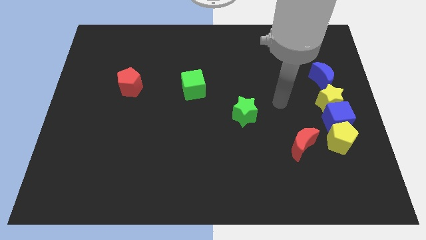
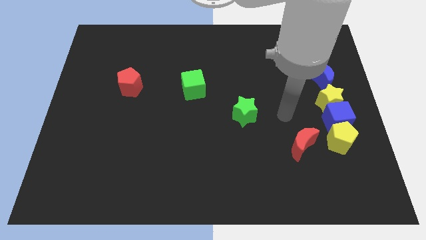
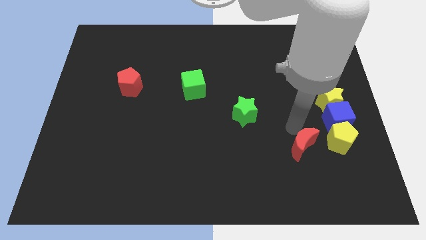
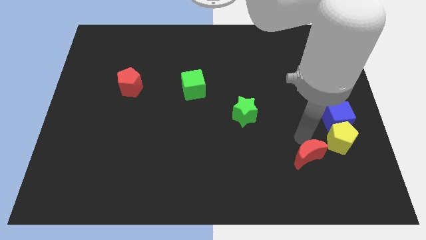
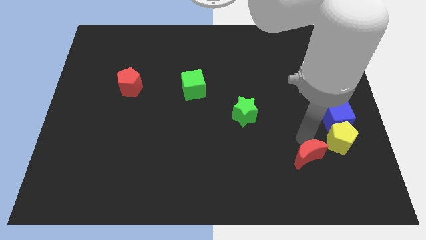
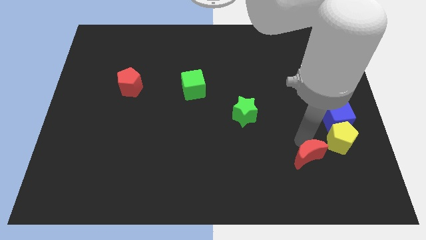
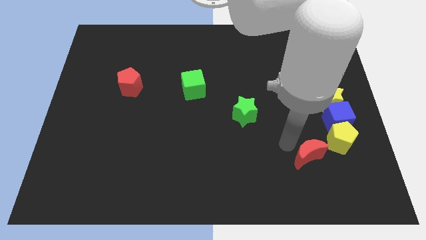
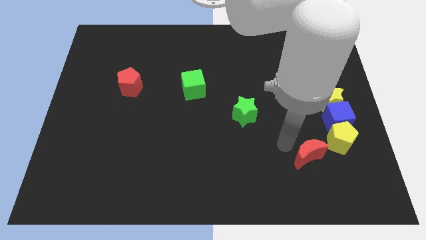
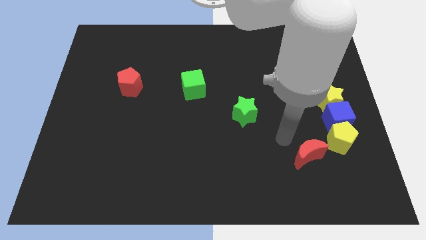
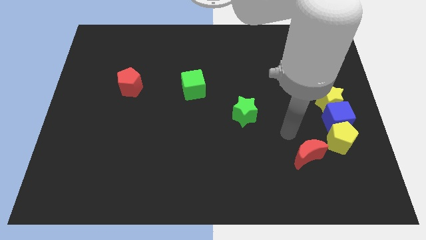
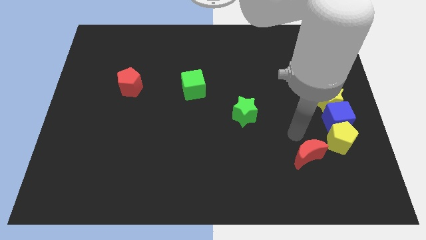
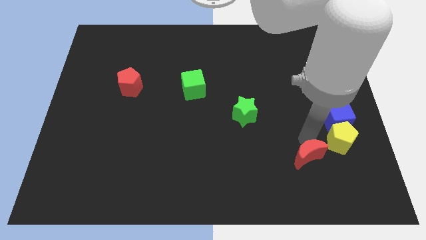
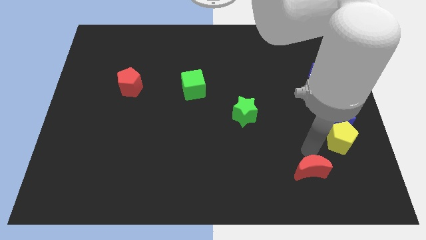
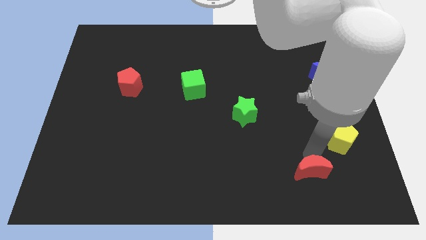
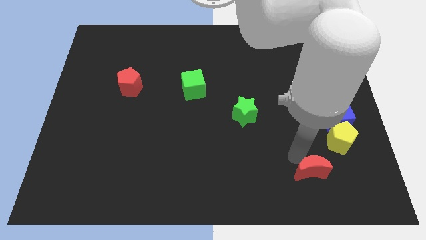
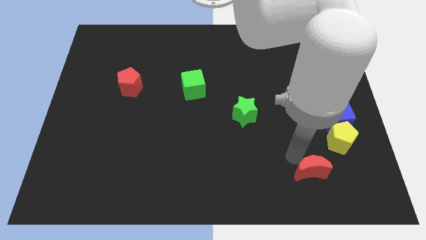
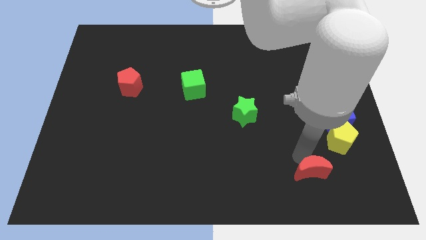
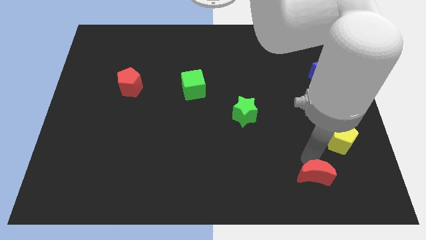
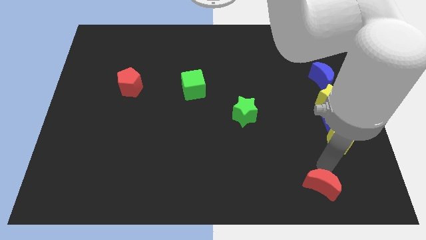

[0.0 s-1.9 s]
push the red moon towards bottom

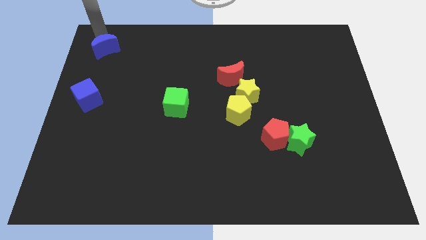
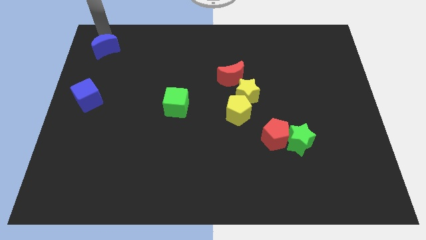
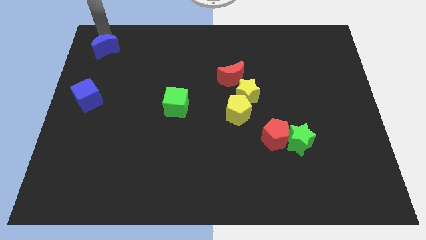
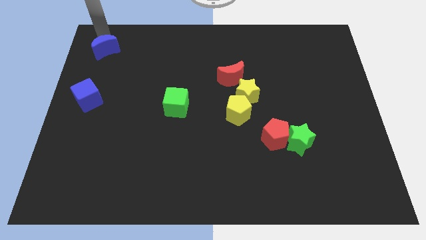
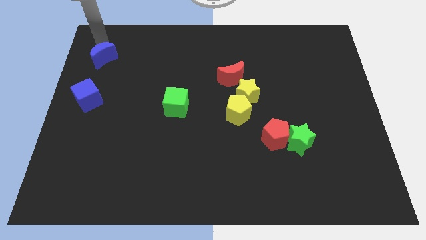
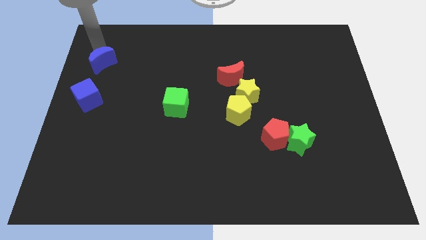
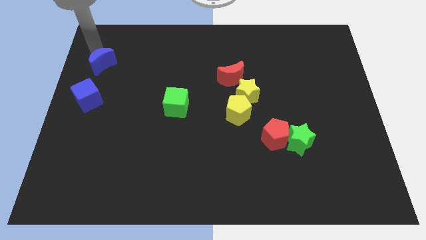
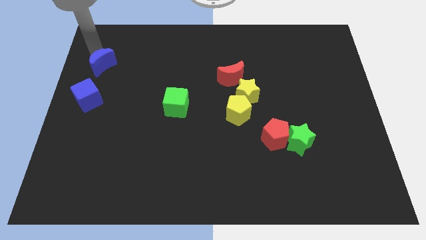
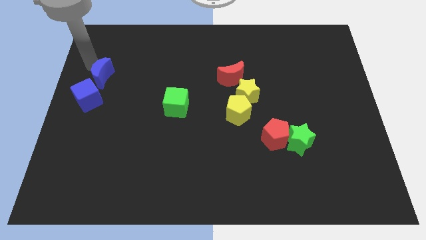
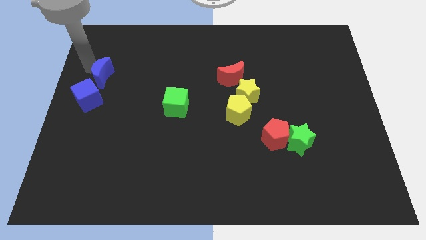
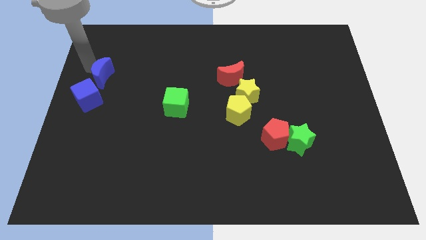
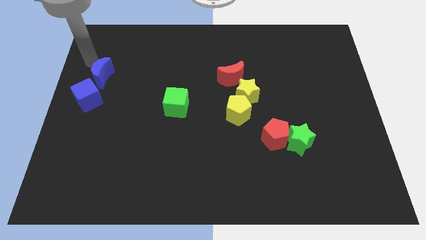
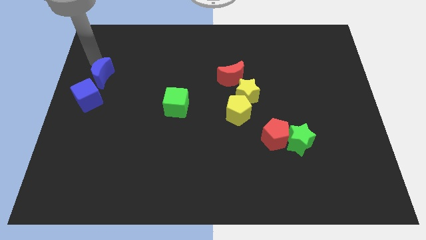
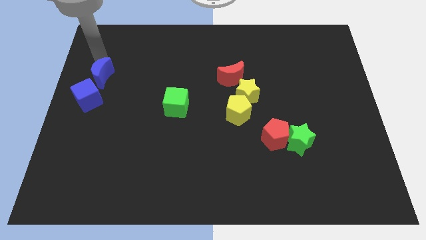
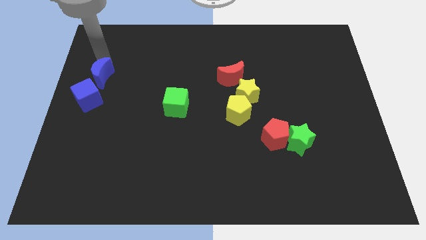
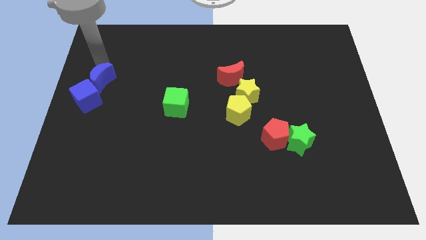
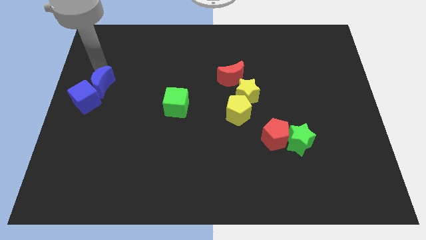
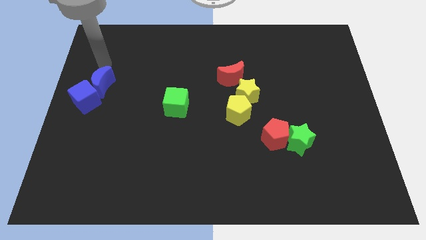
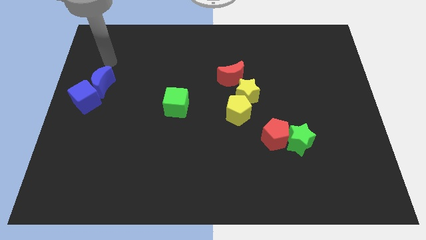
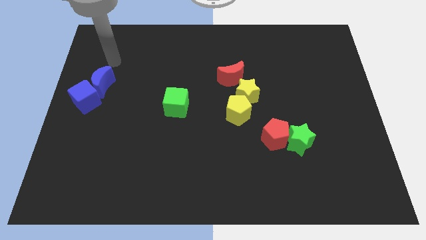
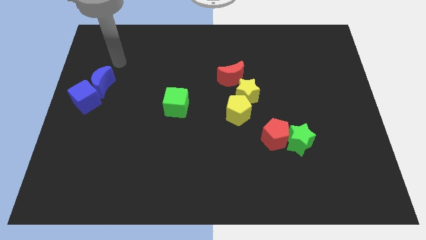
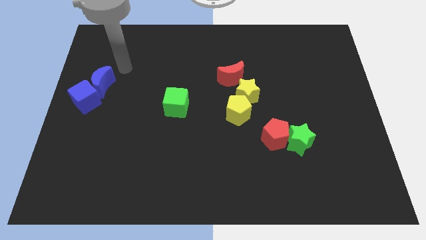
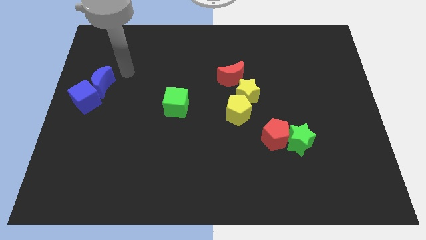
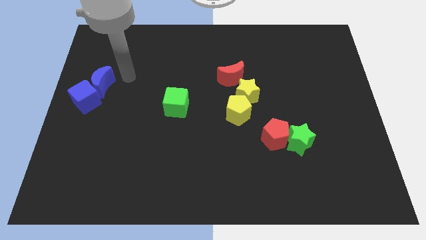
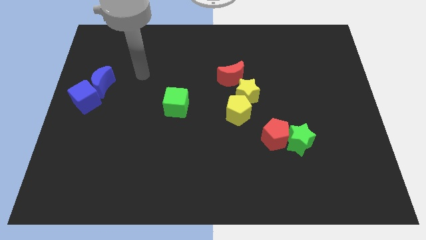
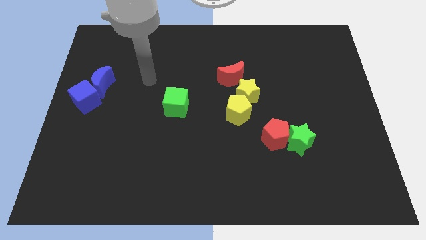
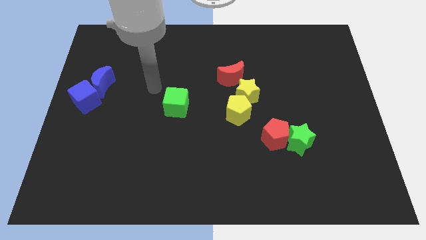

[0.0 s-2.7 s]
move the blue crescent into the blue cube

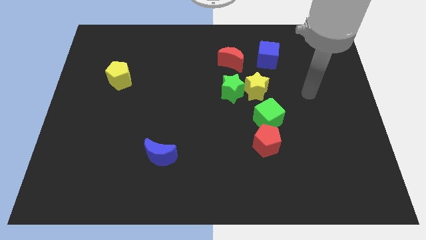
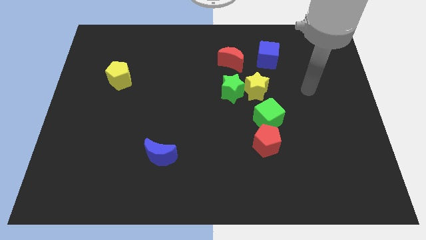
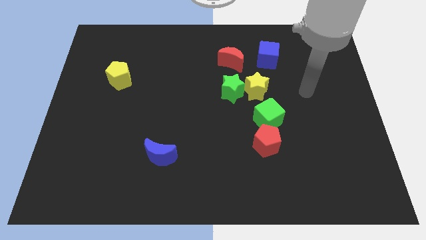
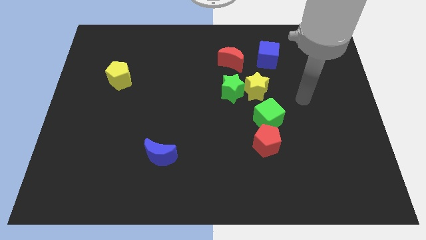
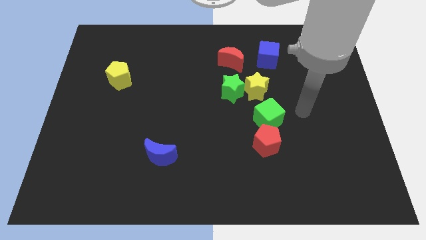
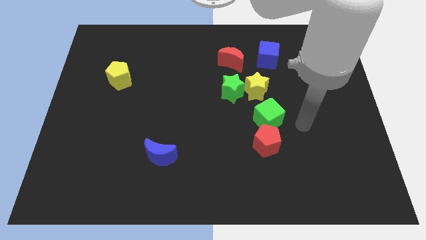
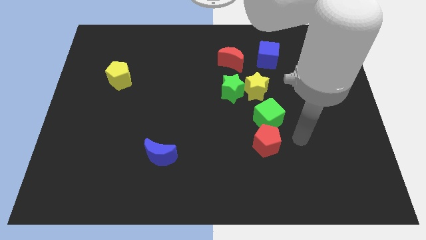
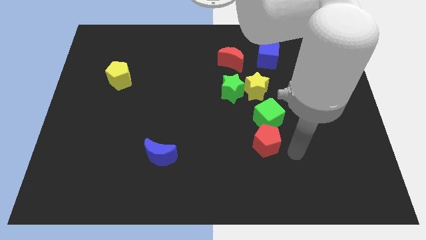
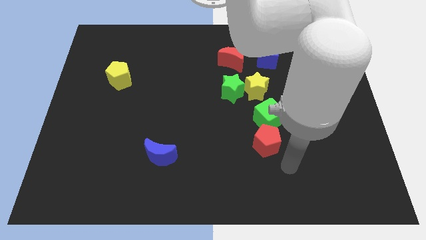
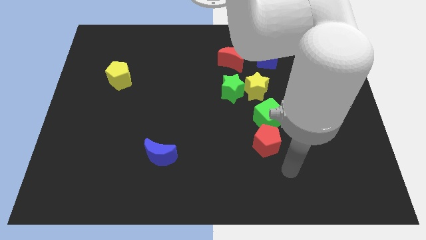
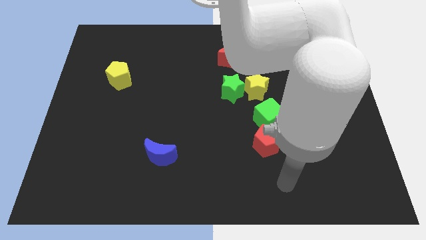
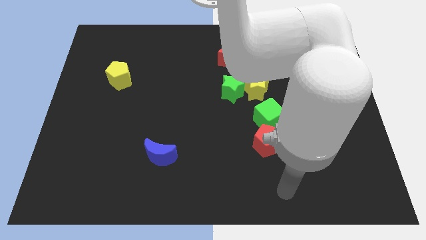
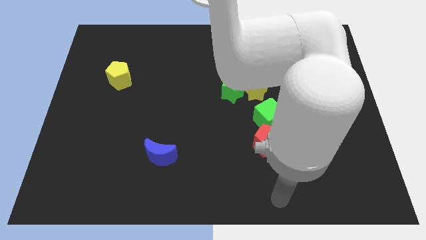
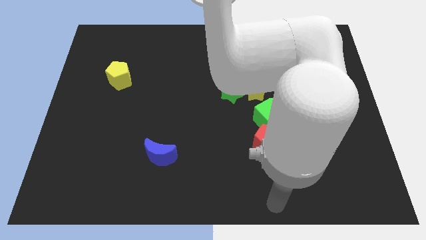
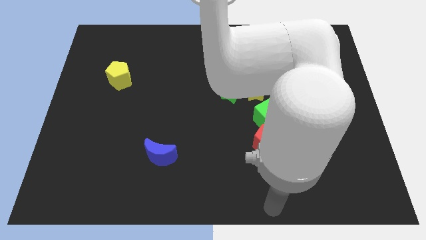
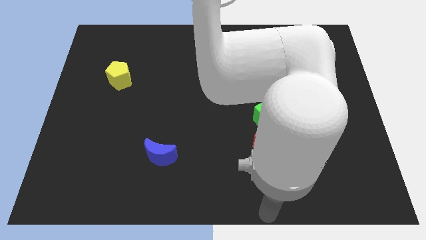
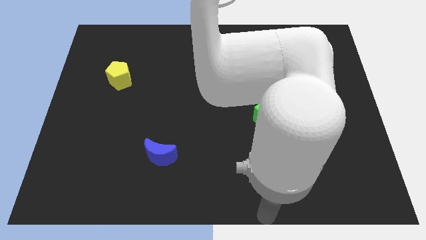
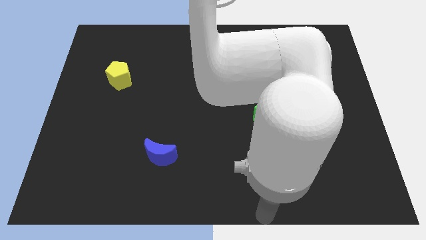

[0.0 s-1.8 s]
move your arm to the bottom center of the board

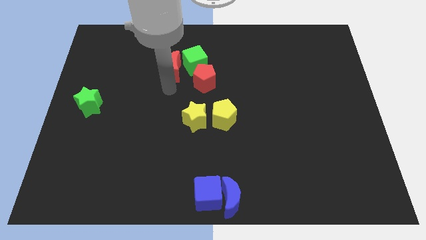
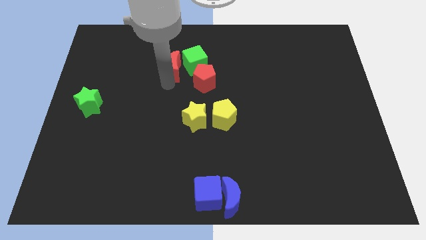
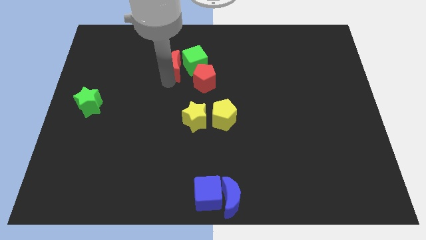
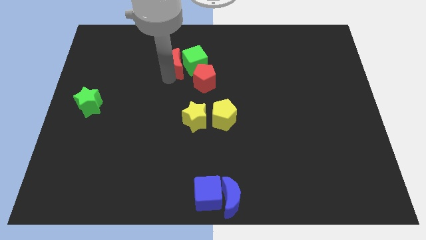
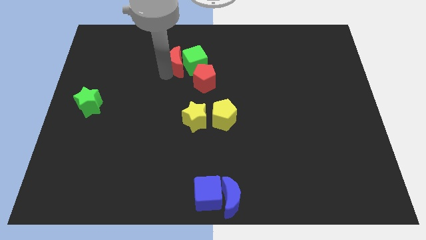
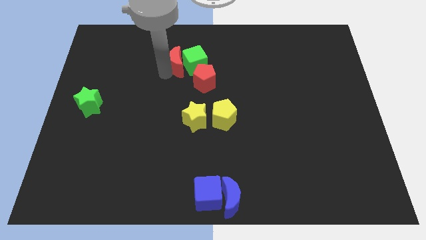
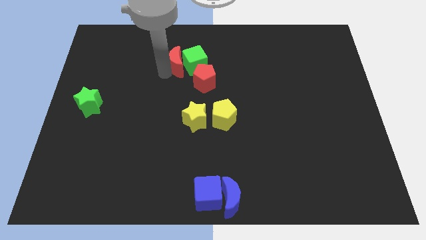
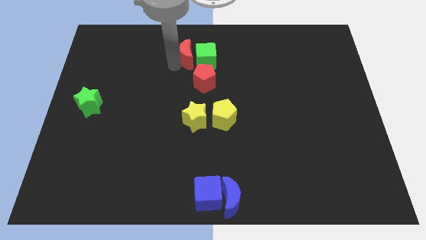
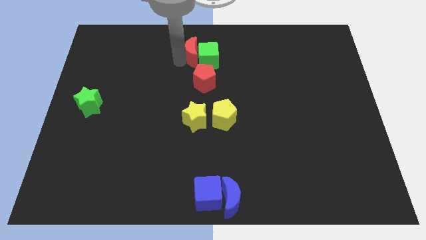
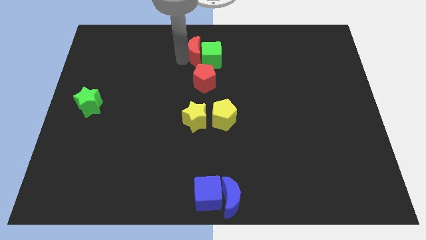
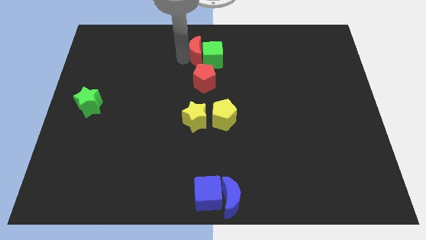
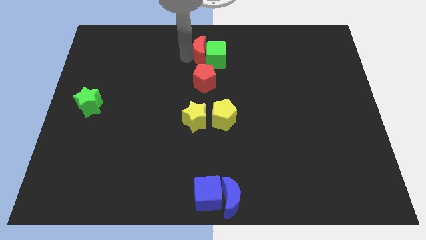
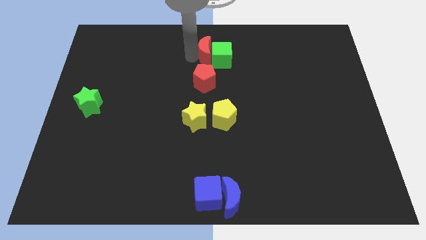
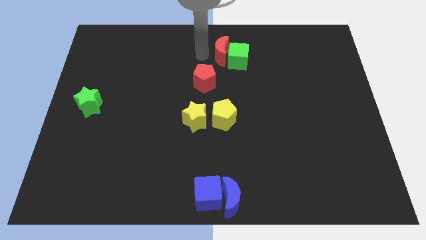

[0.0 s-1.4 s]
move red moon and green cube slightly right

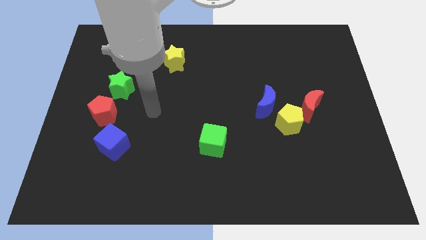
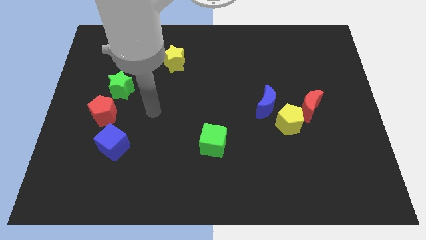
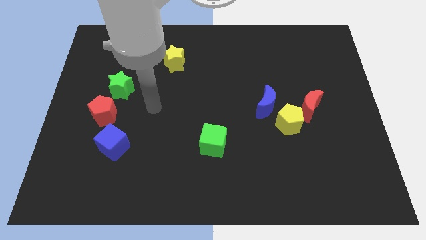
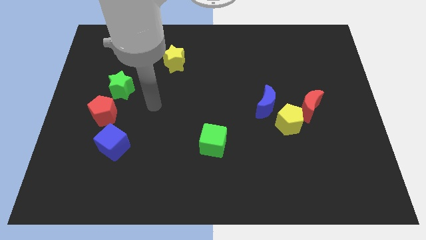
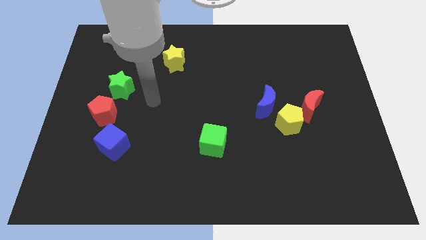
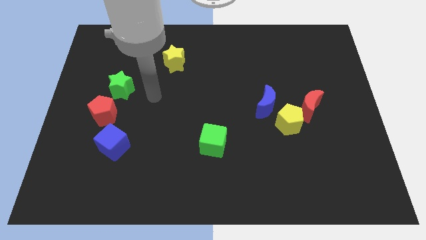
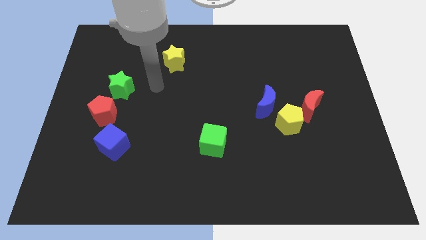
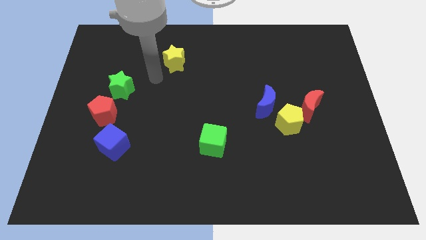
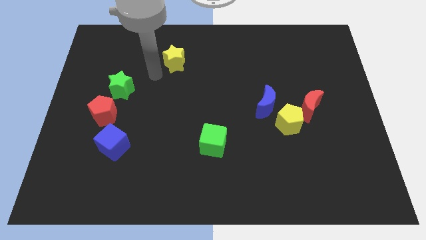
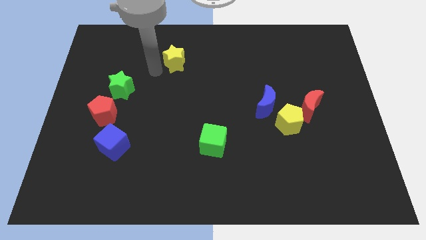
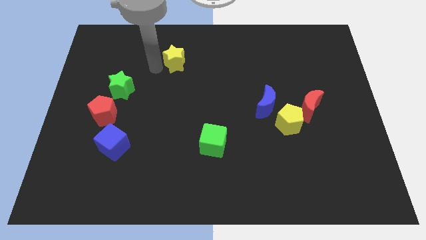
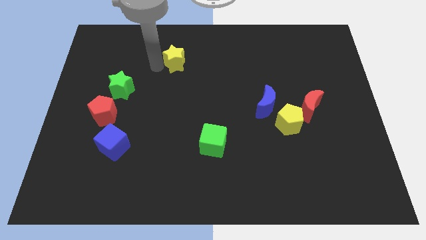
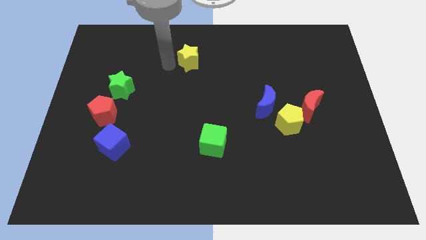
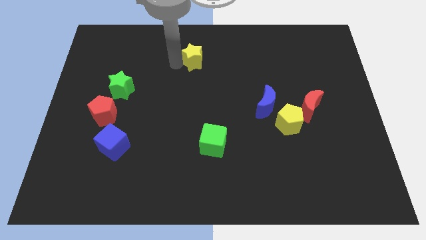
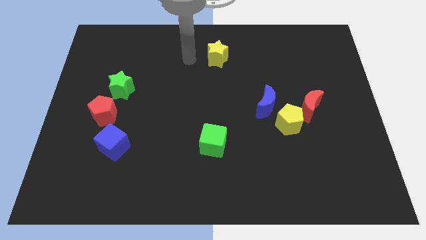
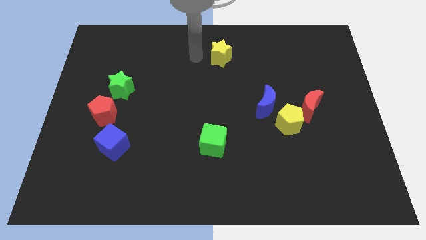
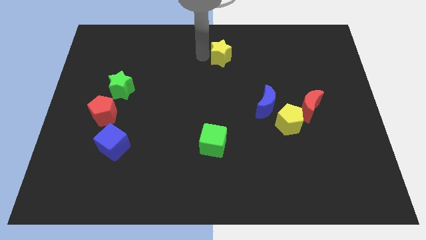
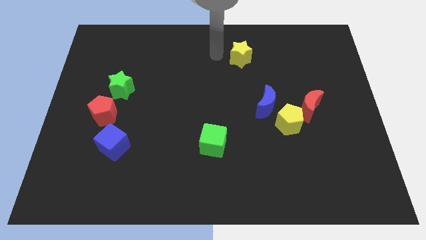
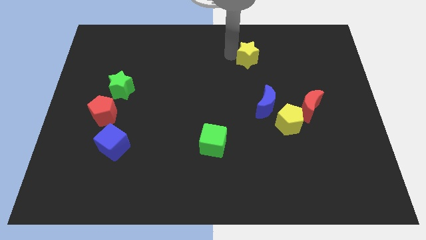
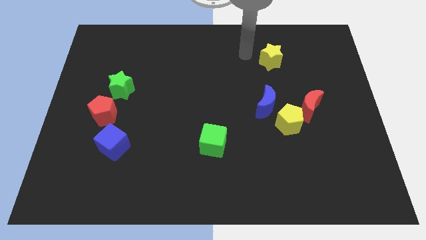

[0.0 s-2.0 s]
put the yellow star vertically above the blue moon
